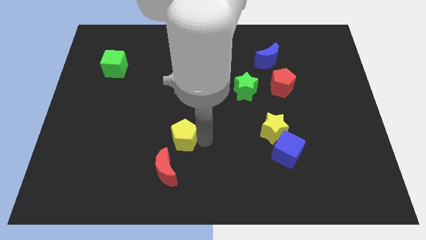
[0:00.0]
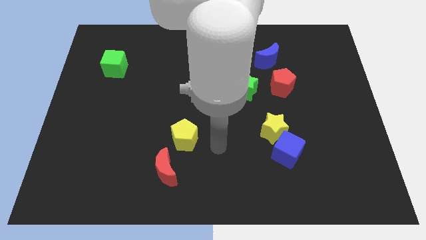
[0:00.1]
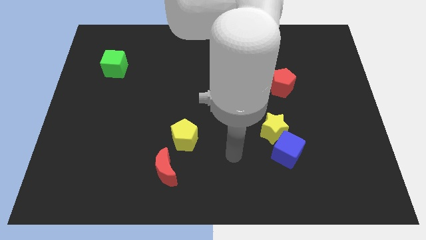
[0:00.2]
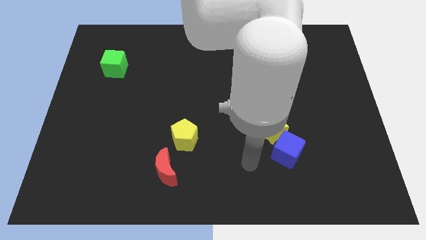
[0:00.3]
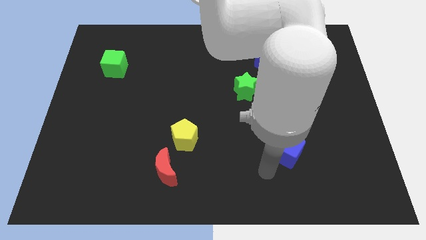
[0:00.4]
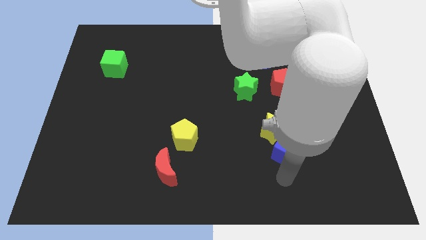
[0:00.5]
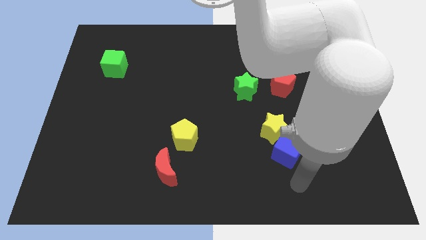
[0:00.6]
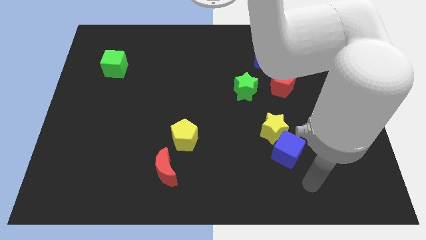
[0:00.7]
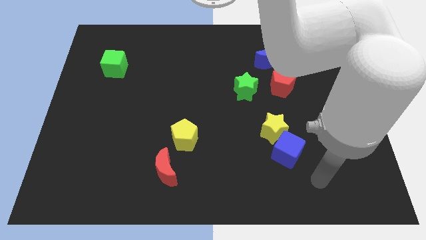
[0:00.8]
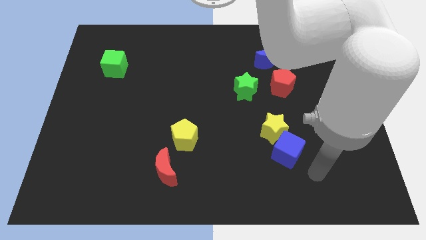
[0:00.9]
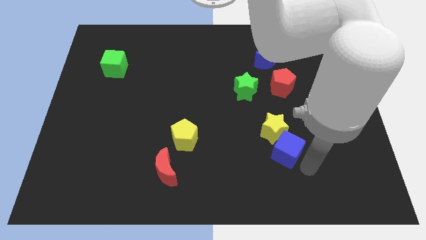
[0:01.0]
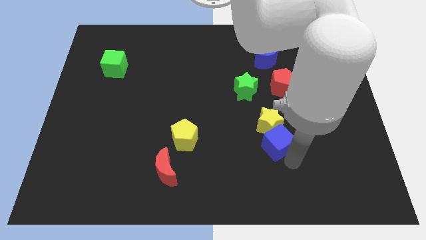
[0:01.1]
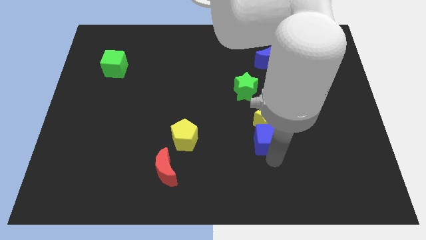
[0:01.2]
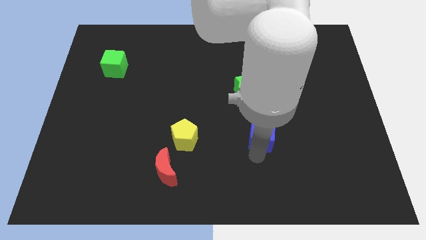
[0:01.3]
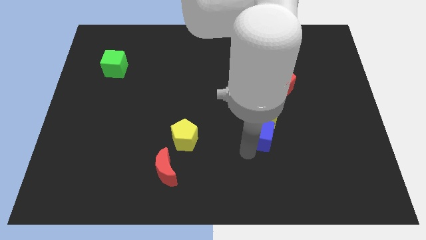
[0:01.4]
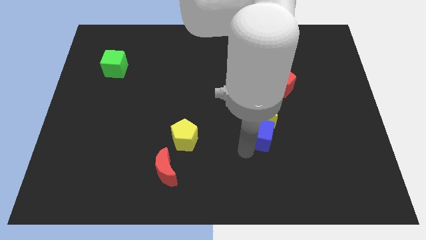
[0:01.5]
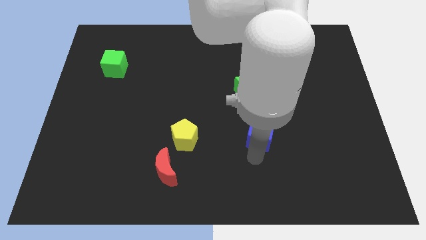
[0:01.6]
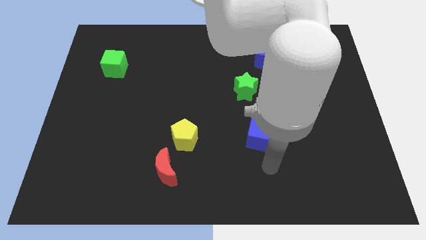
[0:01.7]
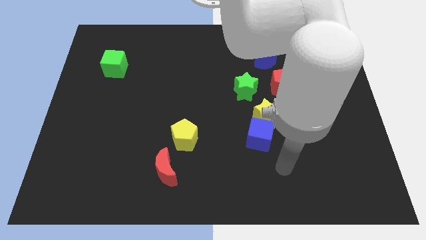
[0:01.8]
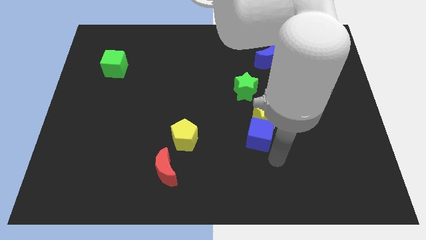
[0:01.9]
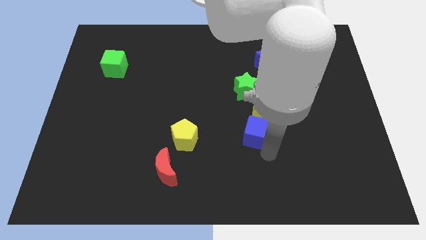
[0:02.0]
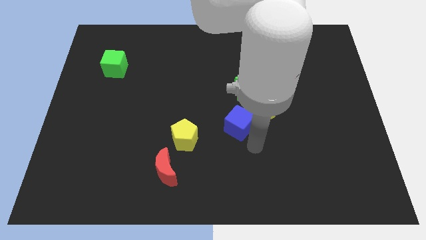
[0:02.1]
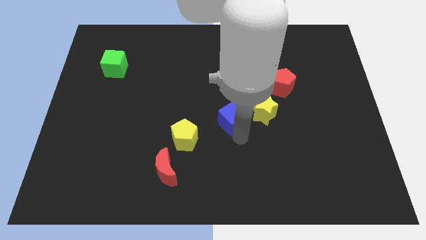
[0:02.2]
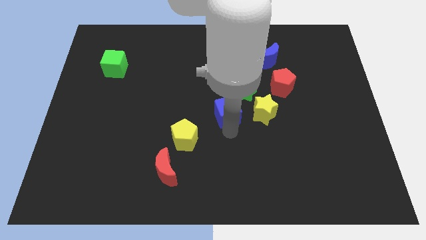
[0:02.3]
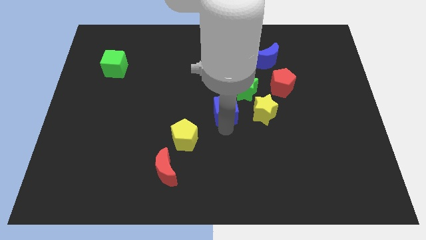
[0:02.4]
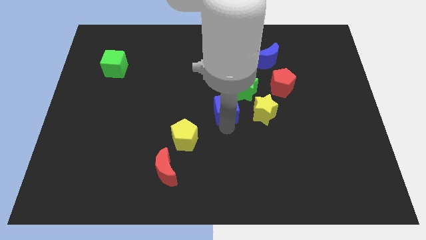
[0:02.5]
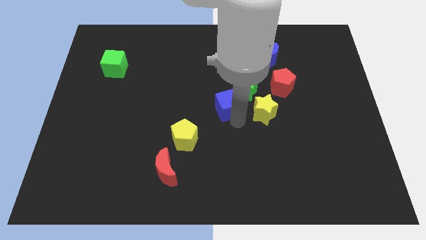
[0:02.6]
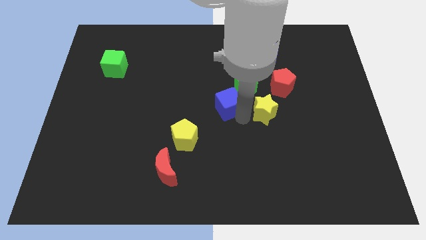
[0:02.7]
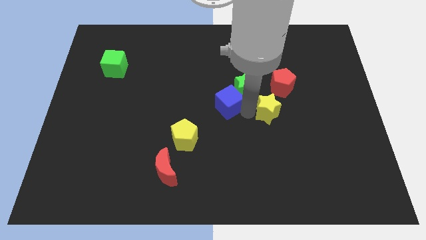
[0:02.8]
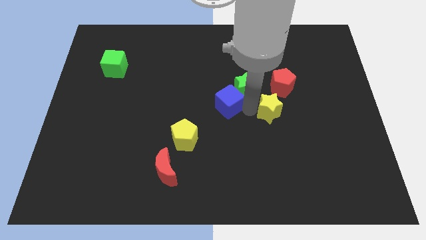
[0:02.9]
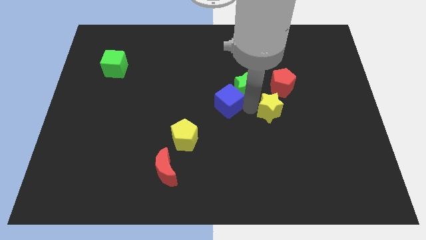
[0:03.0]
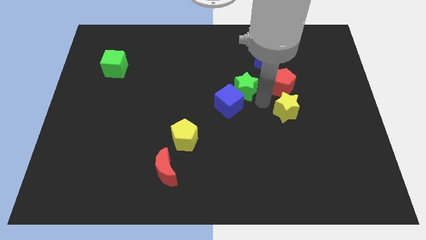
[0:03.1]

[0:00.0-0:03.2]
move the blue cube to the bottom left side of the green star

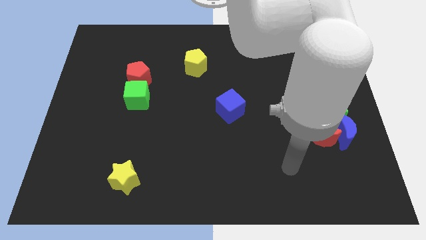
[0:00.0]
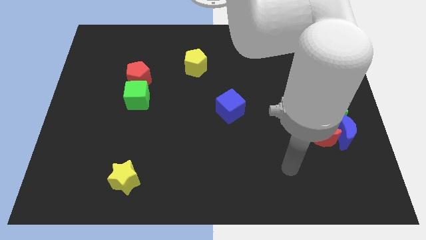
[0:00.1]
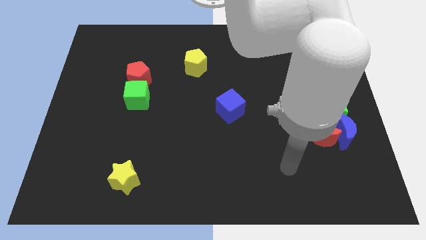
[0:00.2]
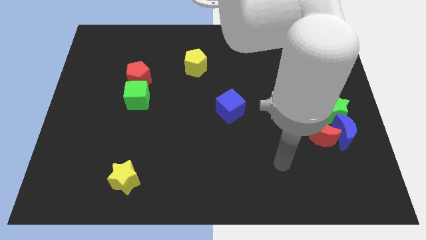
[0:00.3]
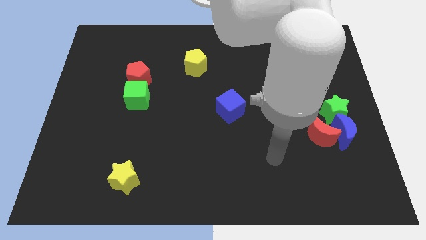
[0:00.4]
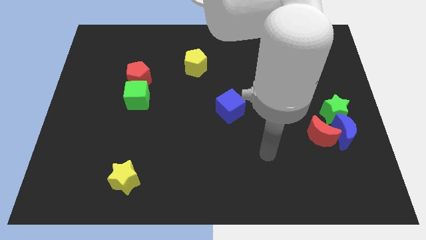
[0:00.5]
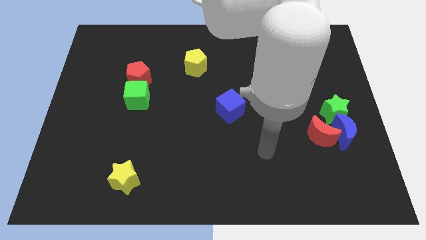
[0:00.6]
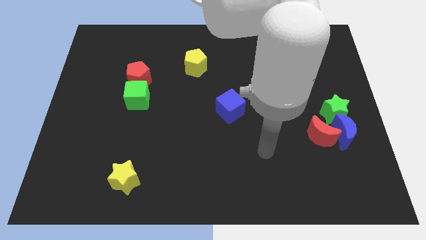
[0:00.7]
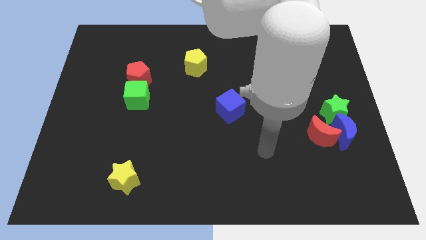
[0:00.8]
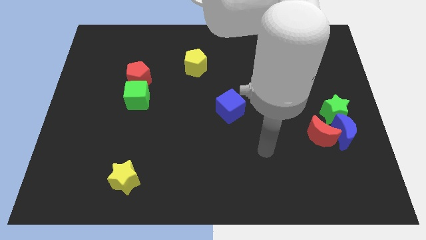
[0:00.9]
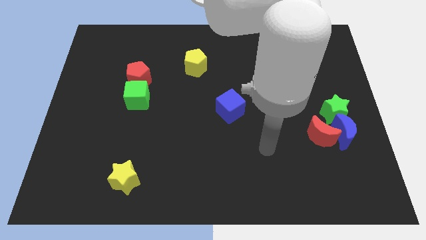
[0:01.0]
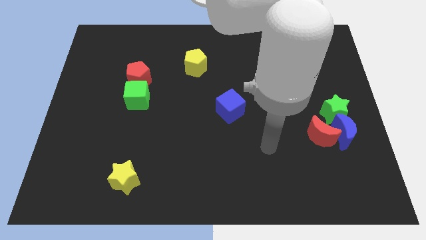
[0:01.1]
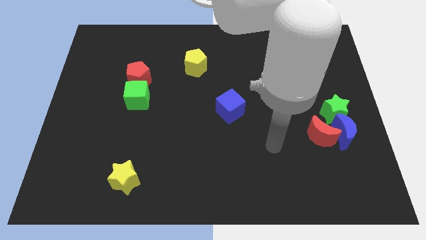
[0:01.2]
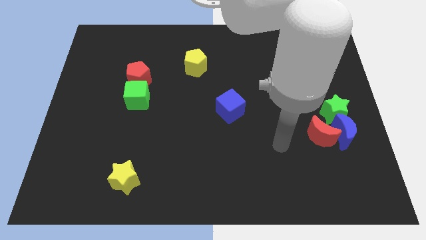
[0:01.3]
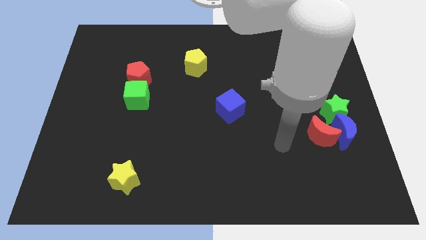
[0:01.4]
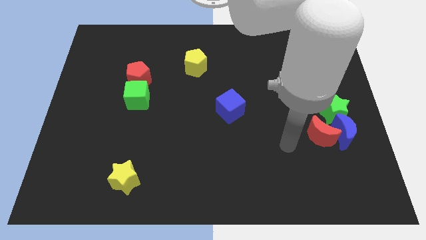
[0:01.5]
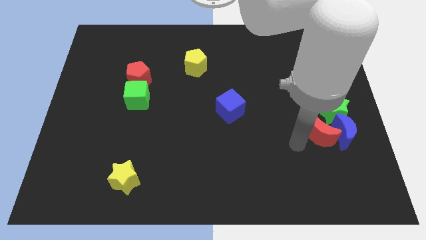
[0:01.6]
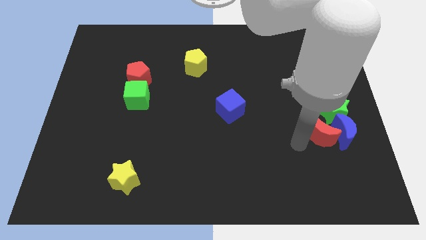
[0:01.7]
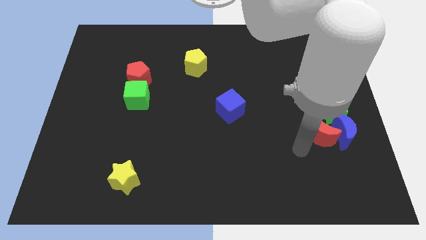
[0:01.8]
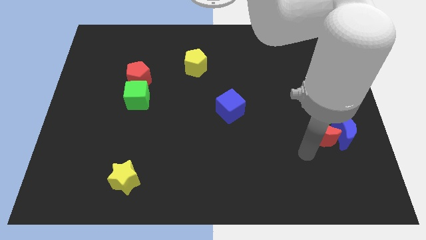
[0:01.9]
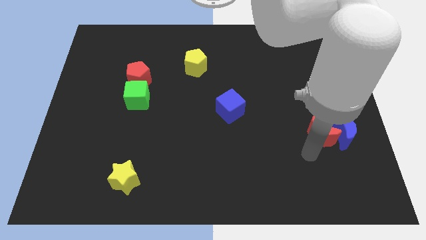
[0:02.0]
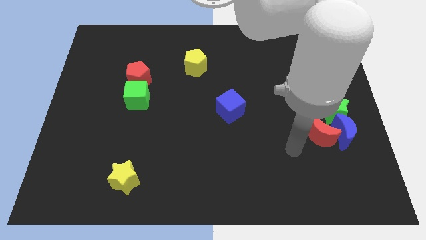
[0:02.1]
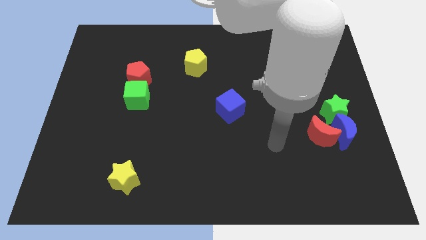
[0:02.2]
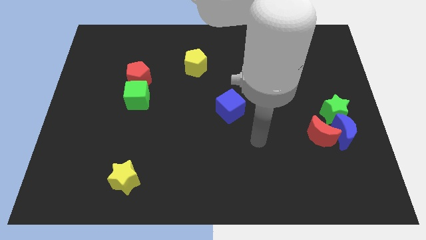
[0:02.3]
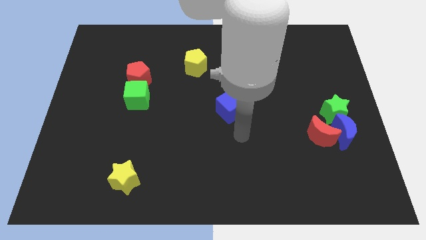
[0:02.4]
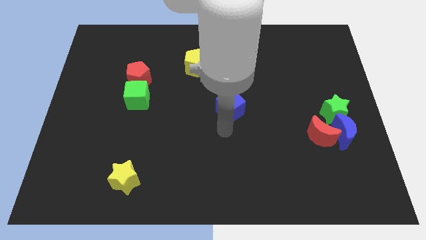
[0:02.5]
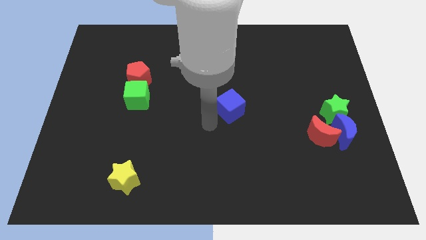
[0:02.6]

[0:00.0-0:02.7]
move arm near blue cube

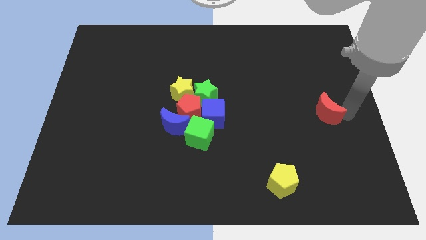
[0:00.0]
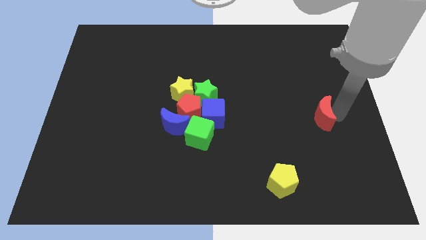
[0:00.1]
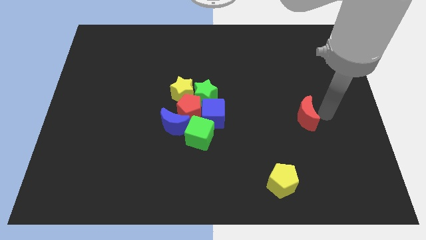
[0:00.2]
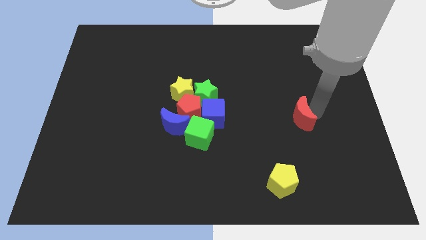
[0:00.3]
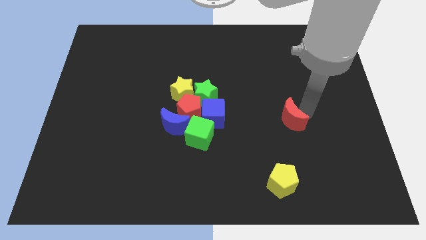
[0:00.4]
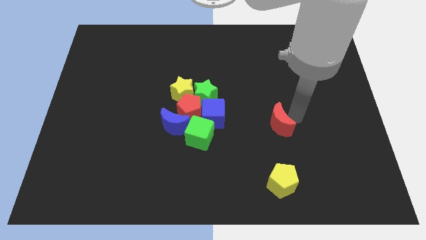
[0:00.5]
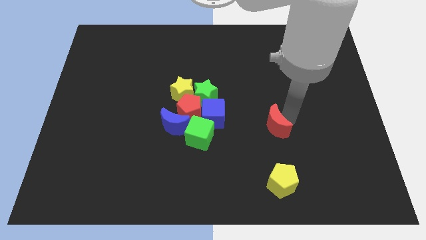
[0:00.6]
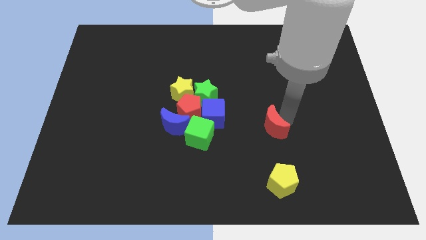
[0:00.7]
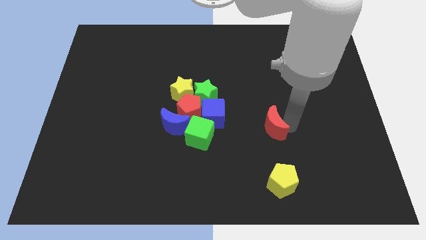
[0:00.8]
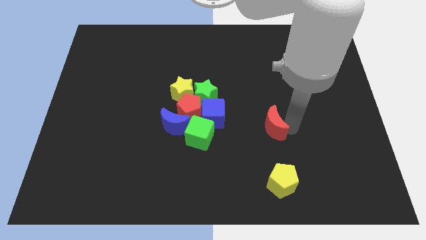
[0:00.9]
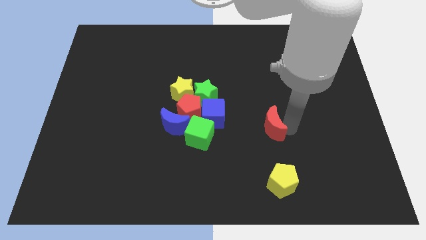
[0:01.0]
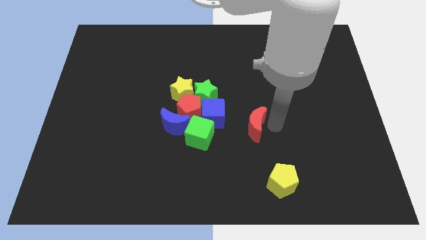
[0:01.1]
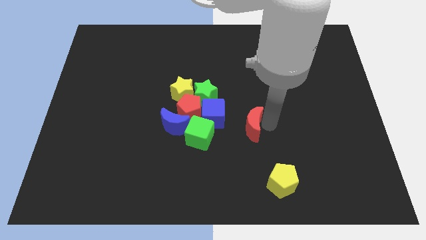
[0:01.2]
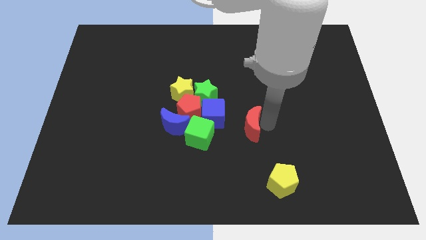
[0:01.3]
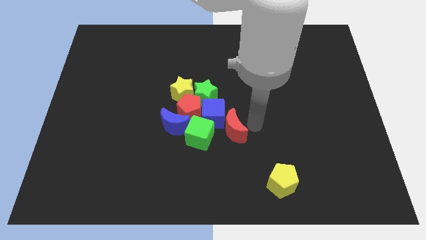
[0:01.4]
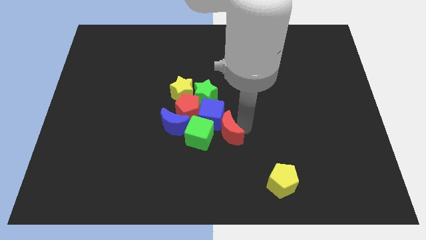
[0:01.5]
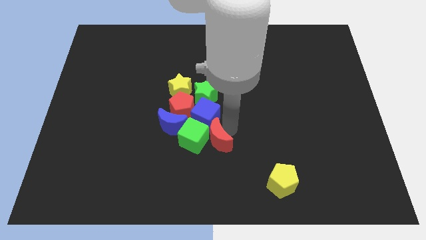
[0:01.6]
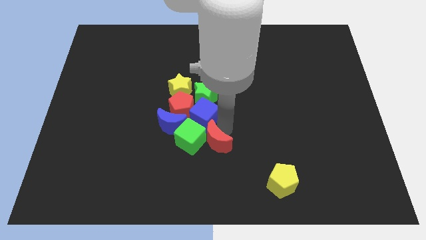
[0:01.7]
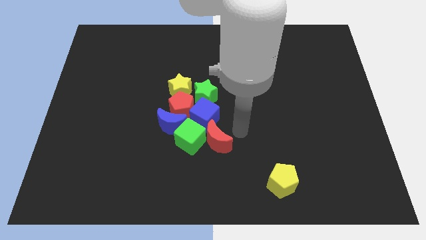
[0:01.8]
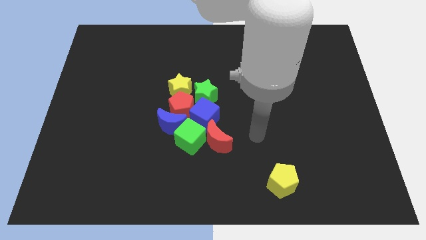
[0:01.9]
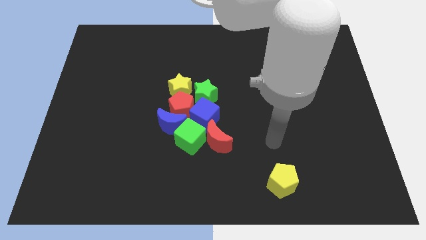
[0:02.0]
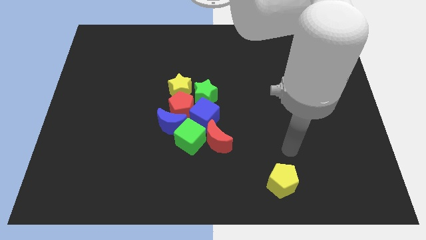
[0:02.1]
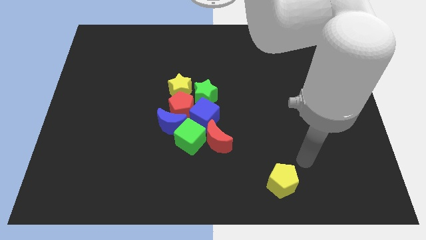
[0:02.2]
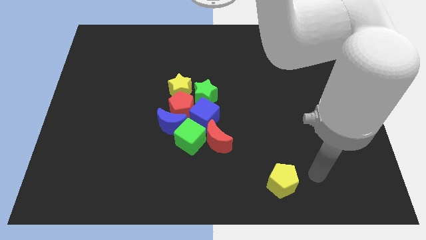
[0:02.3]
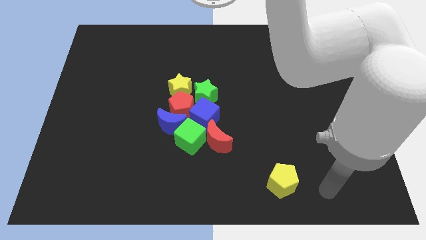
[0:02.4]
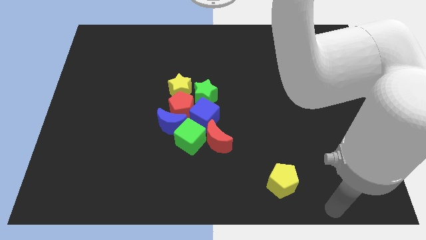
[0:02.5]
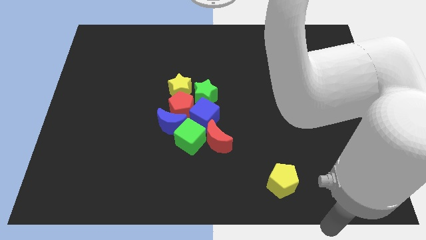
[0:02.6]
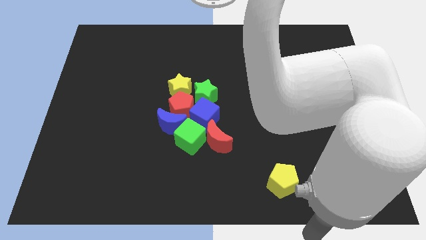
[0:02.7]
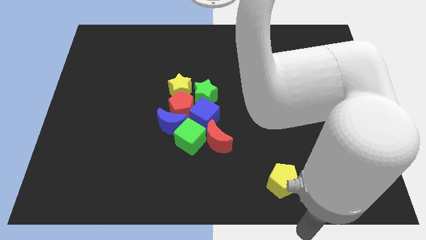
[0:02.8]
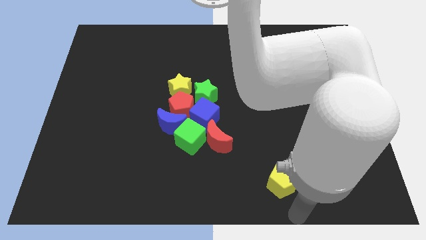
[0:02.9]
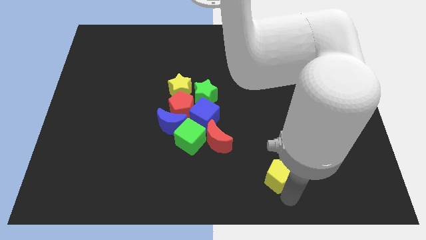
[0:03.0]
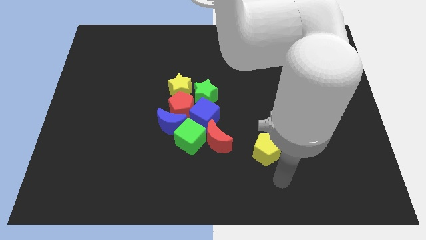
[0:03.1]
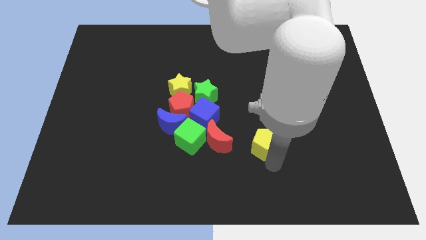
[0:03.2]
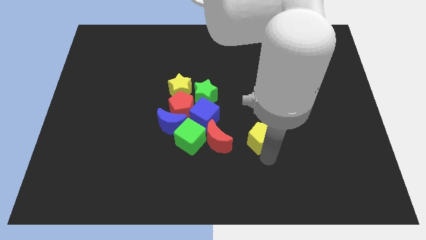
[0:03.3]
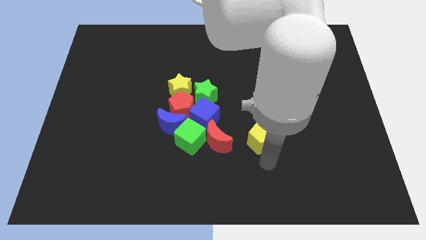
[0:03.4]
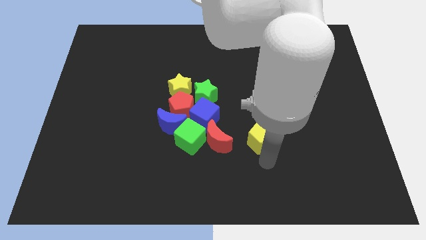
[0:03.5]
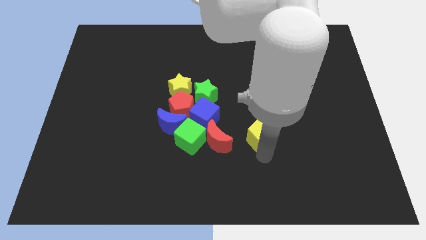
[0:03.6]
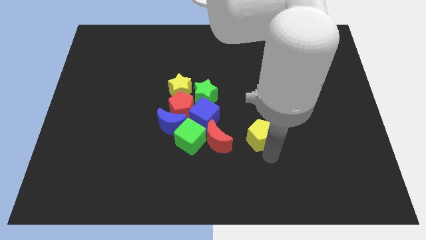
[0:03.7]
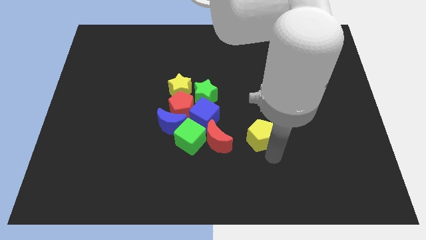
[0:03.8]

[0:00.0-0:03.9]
push the red crescent into the blue cube
